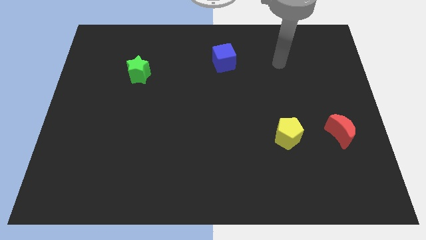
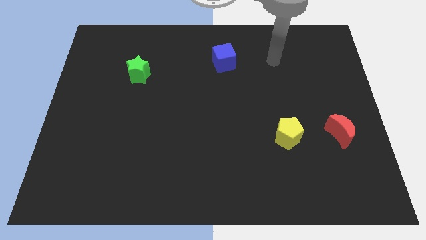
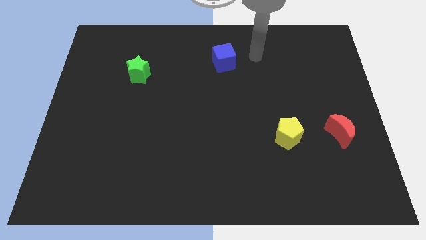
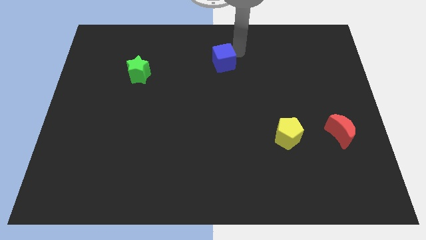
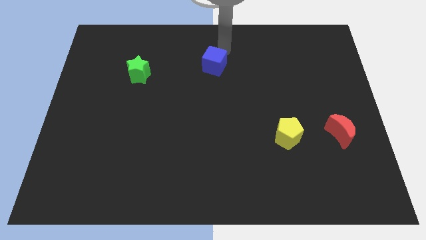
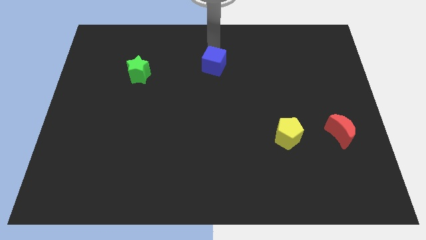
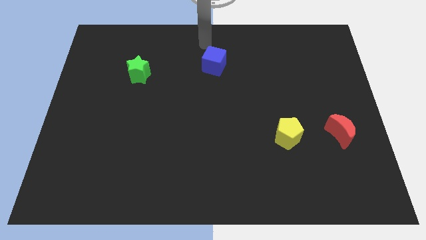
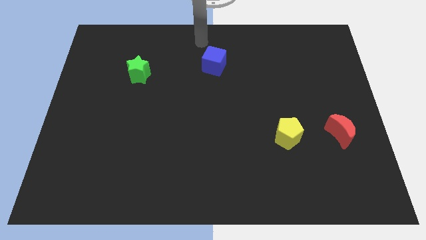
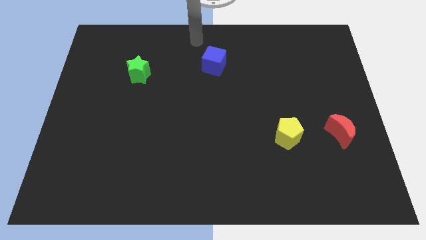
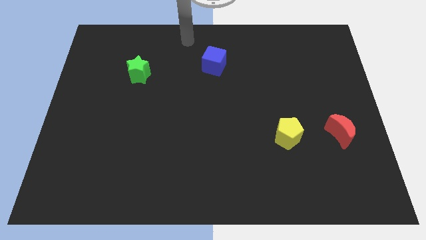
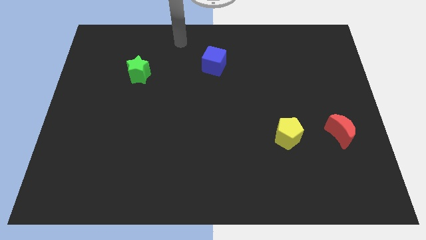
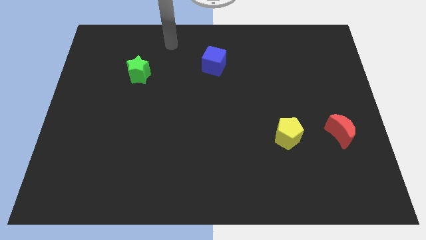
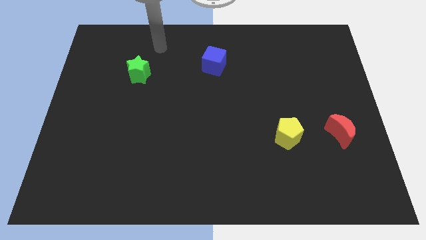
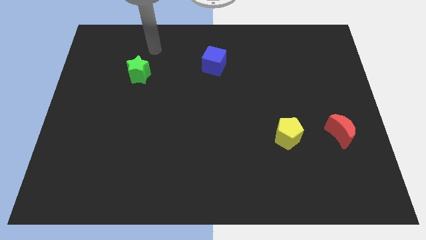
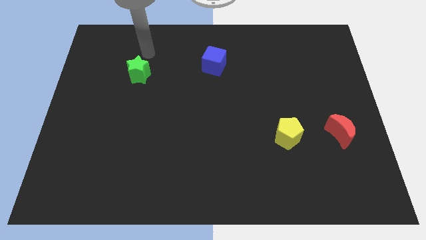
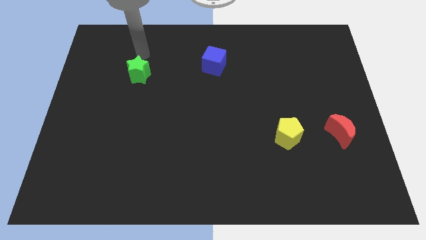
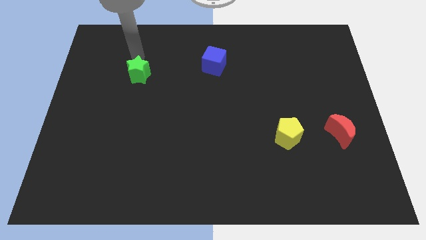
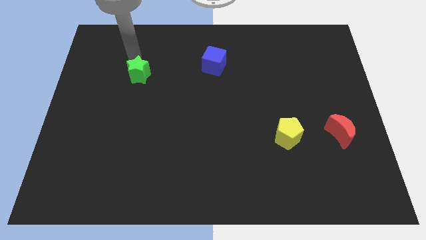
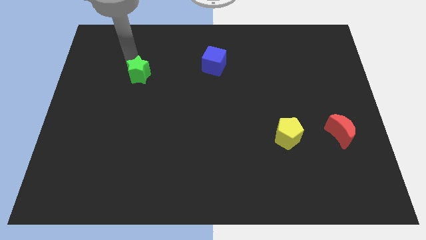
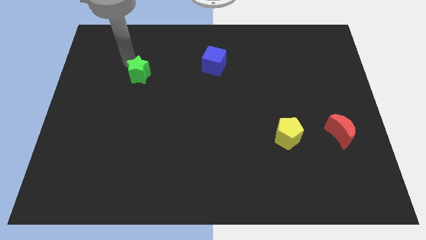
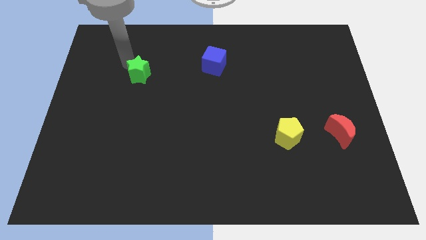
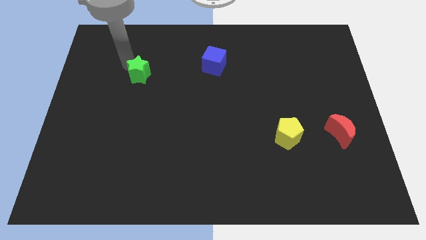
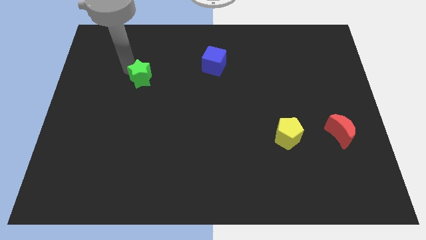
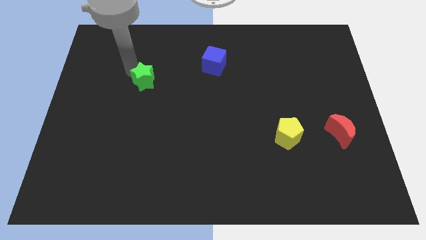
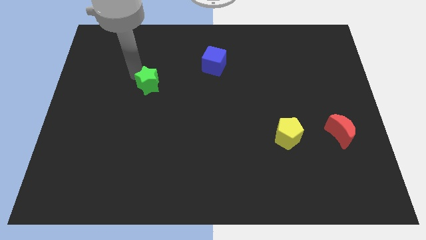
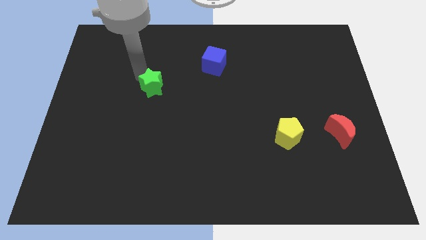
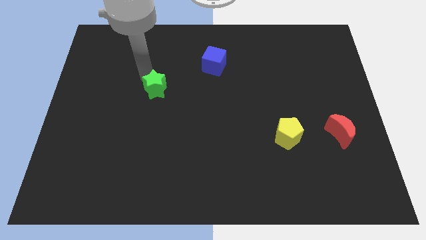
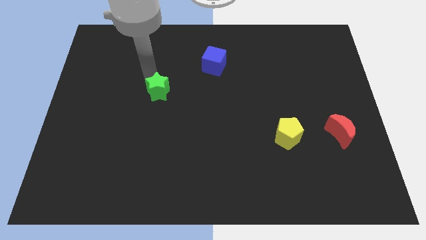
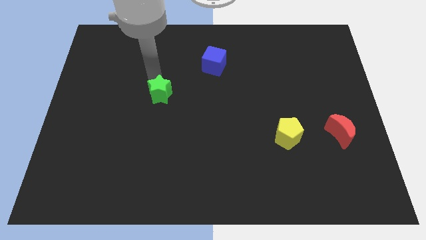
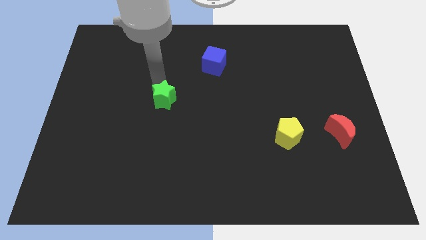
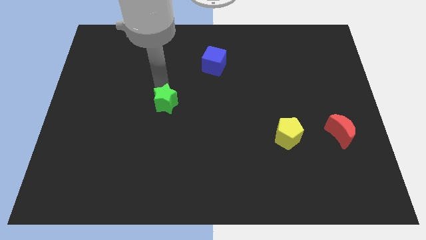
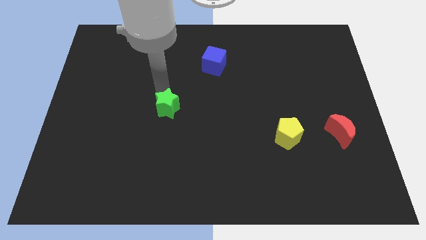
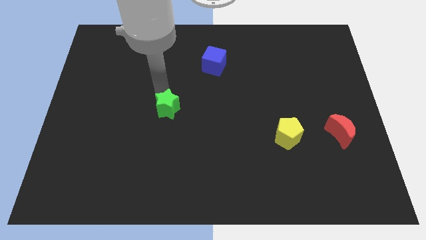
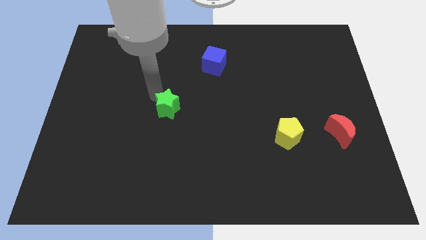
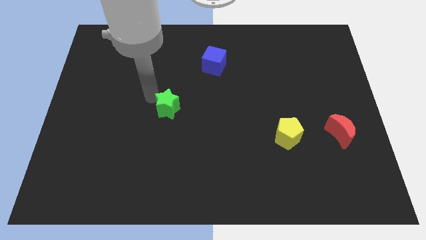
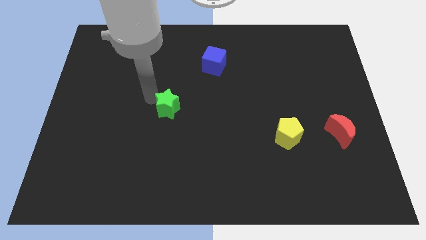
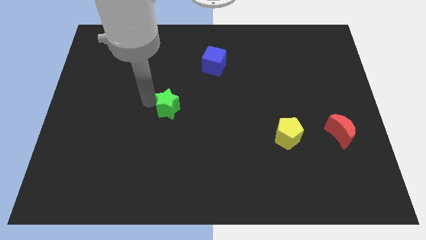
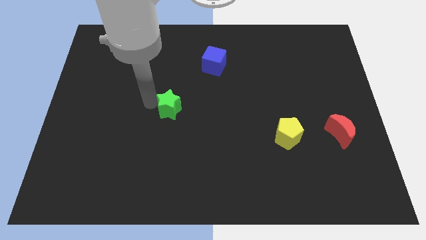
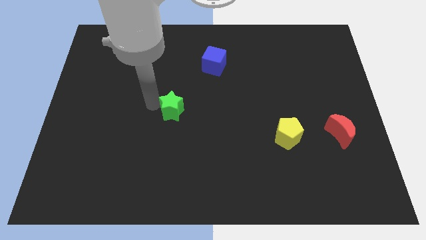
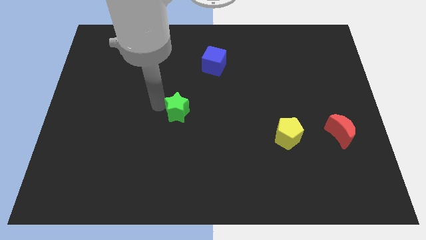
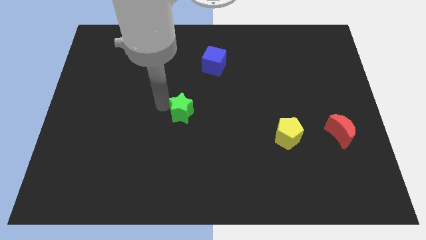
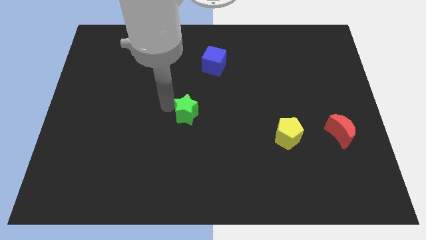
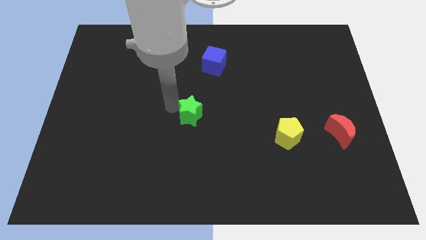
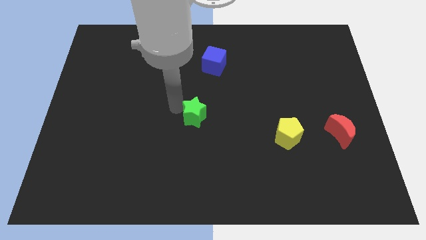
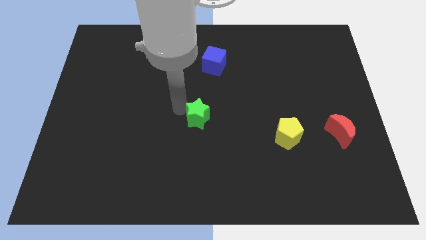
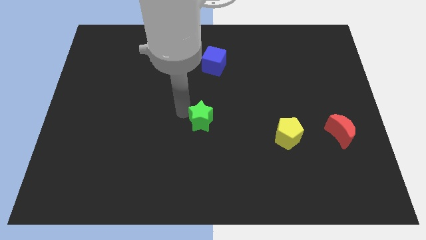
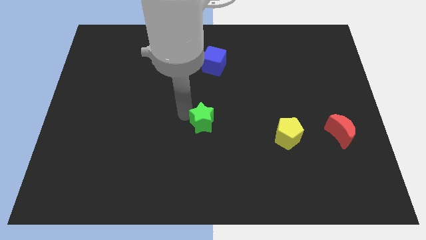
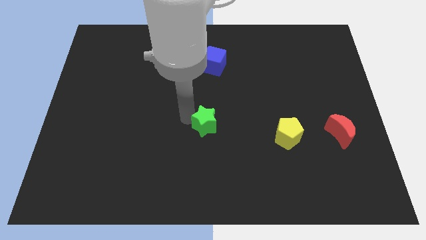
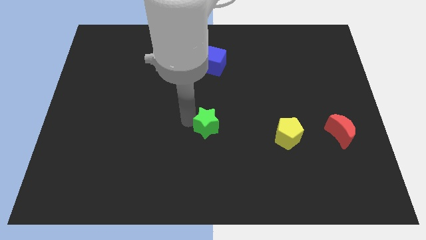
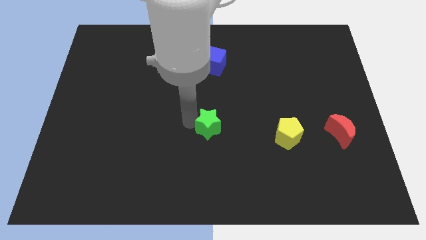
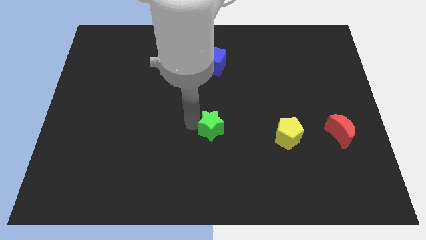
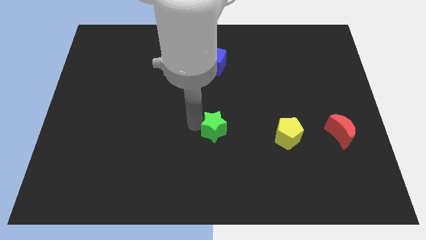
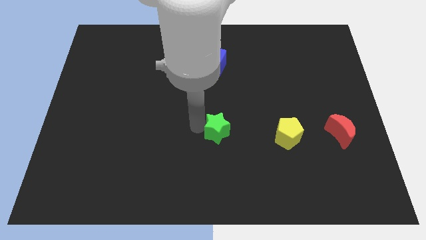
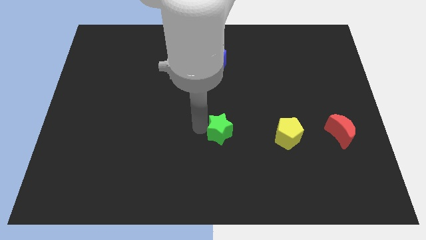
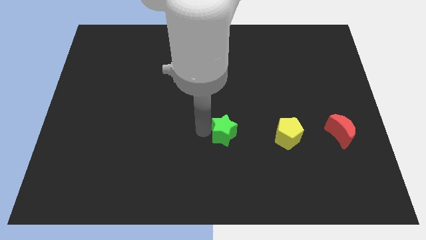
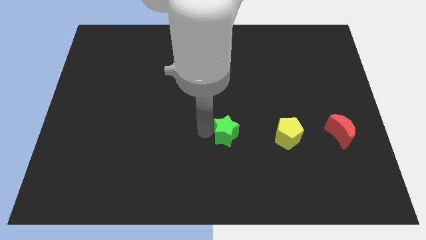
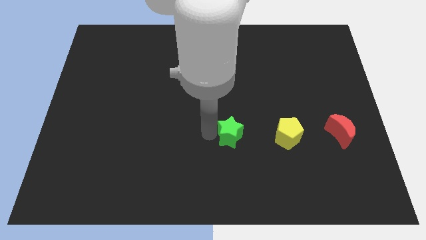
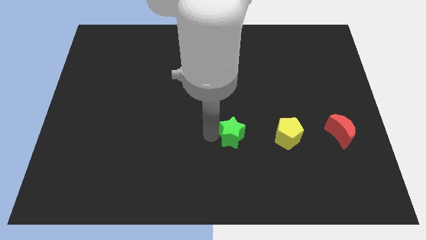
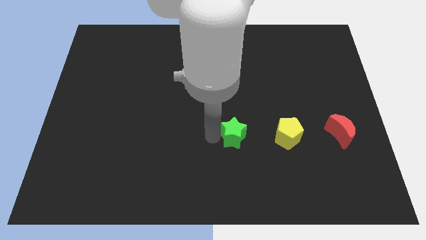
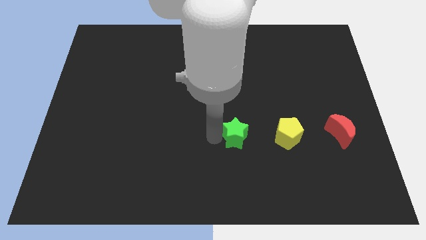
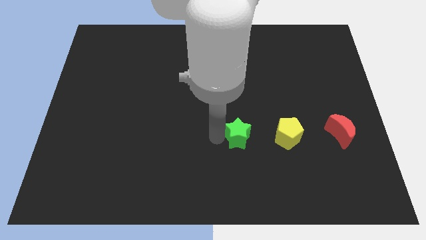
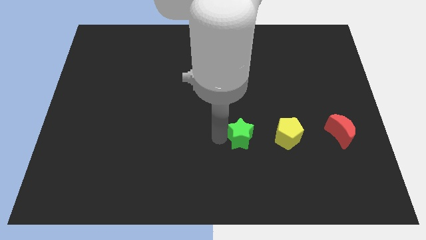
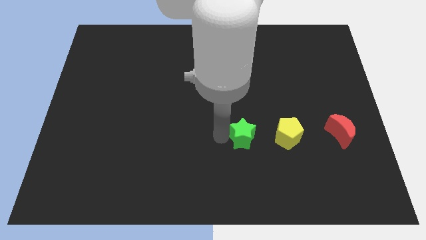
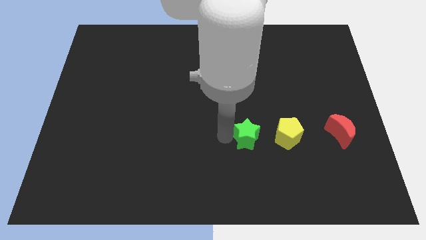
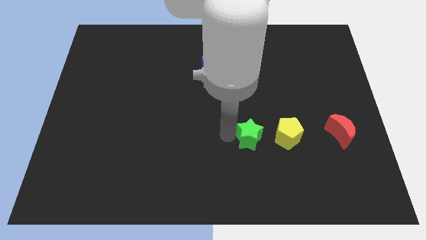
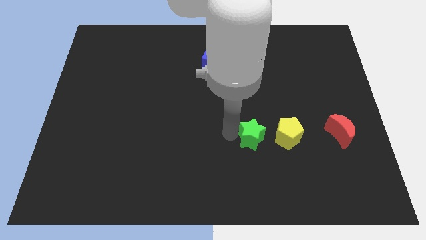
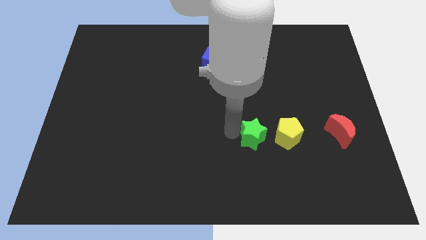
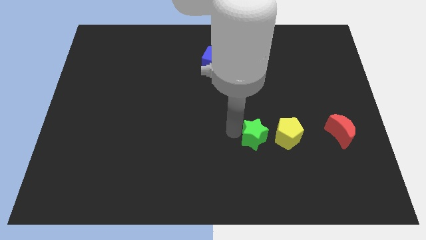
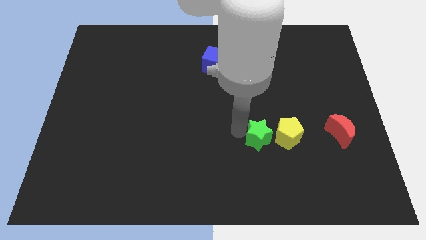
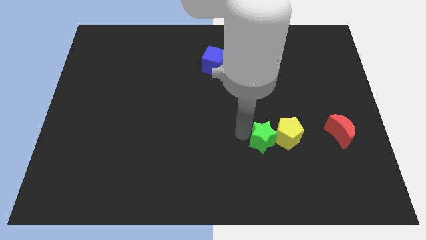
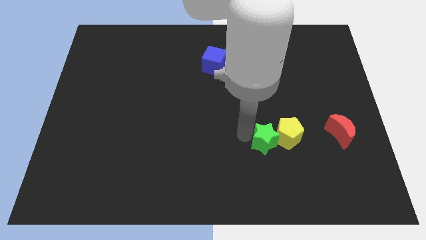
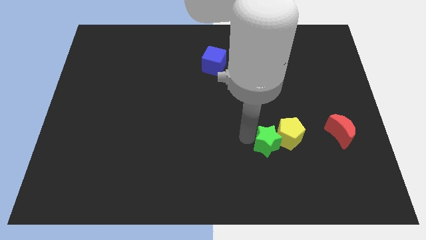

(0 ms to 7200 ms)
move the star next to the yellow block

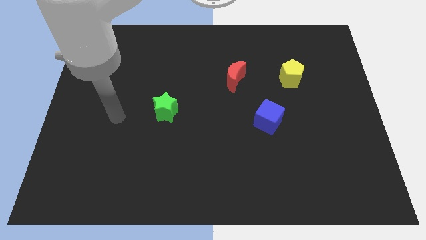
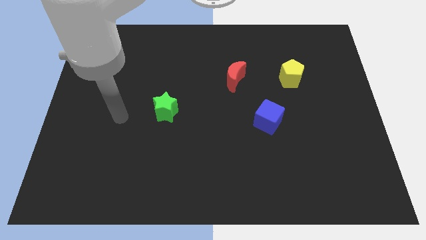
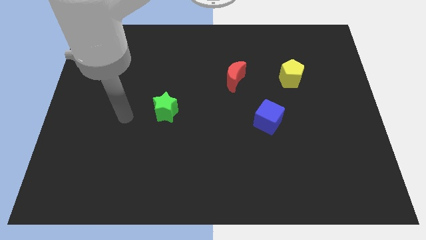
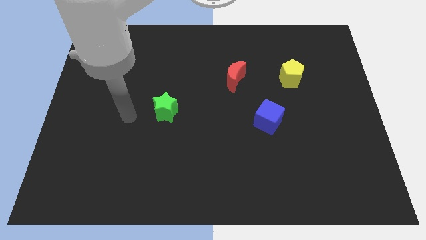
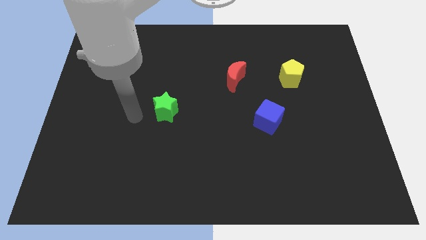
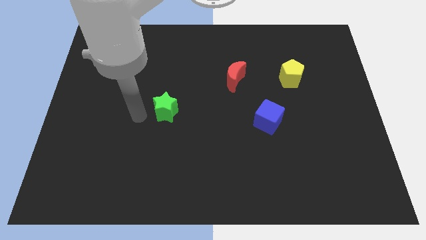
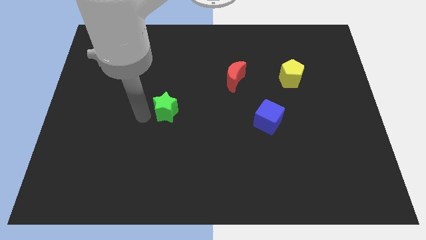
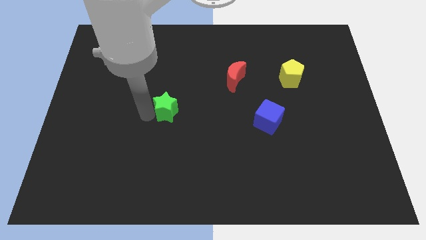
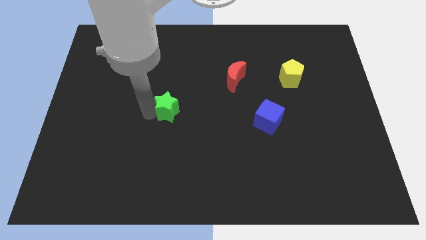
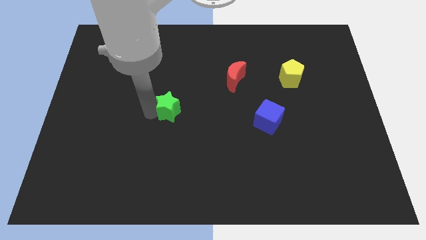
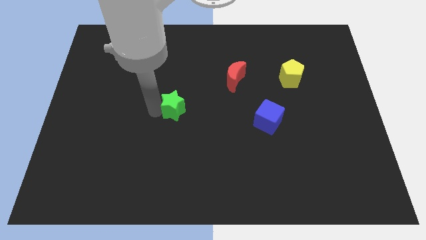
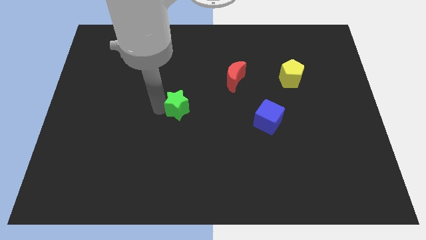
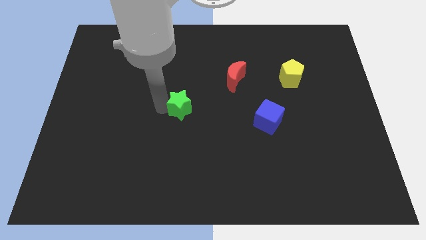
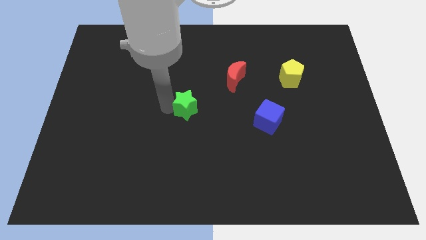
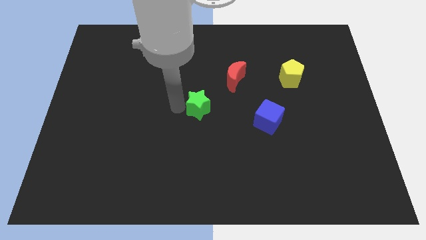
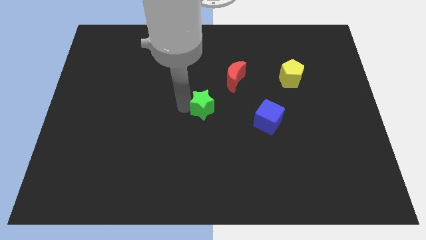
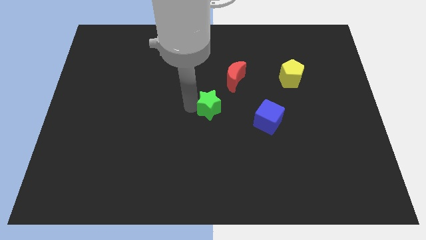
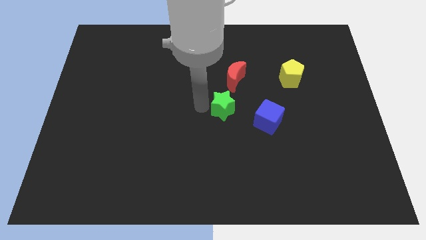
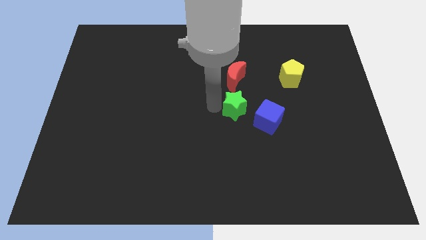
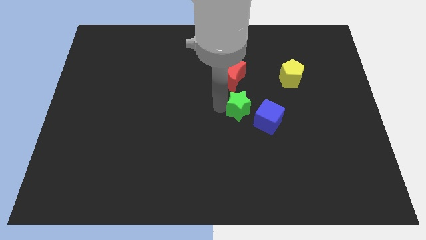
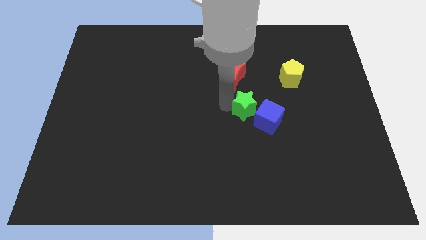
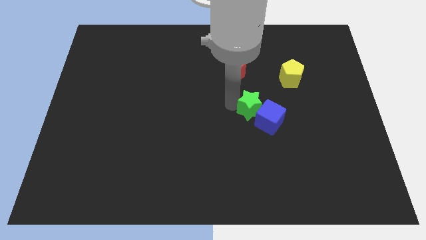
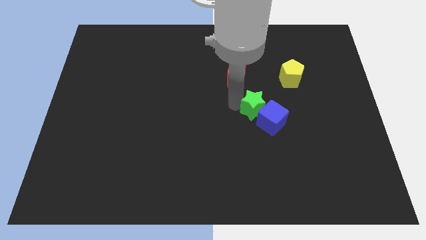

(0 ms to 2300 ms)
push the green block close to the blue block
